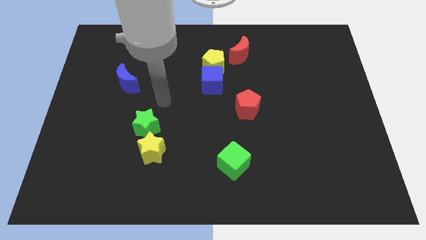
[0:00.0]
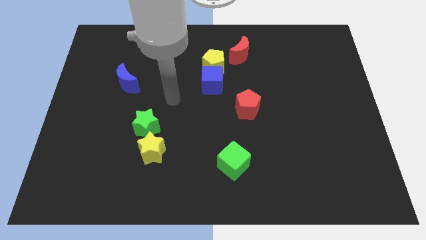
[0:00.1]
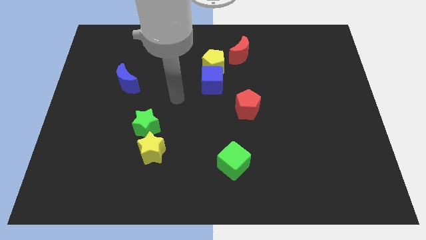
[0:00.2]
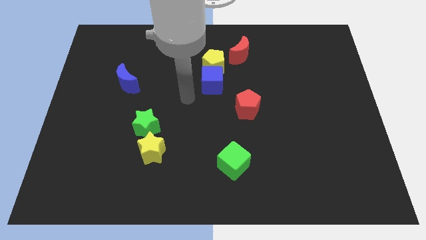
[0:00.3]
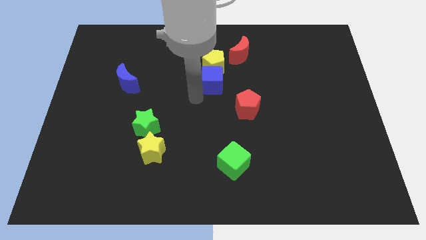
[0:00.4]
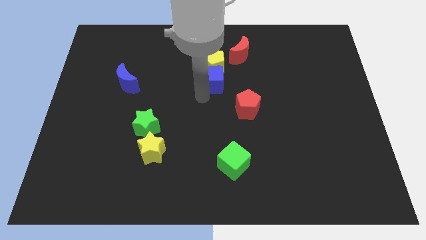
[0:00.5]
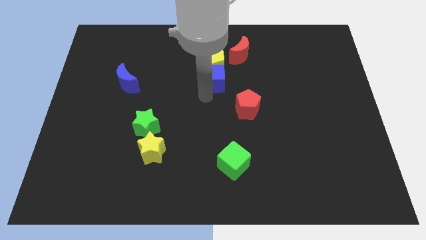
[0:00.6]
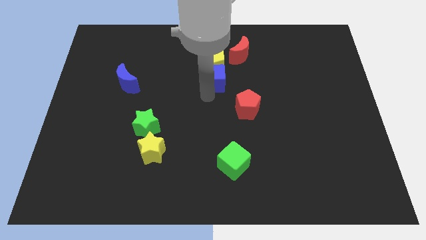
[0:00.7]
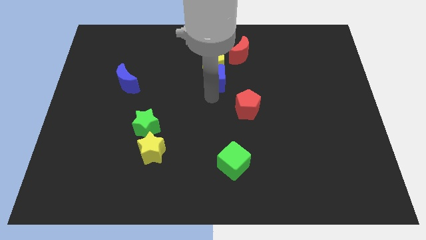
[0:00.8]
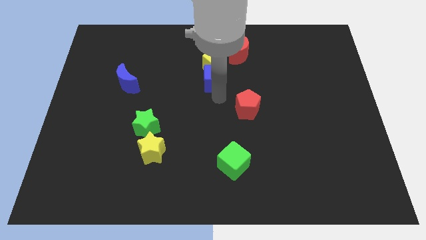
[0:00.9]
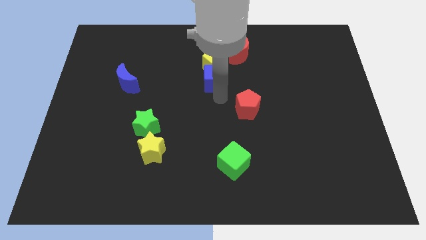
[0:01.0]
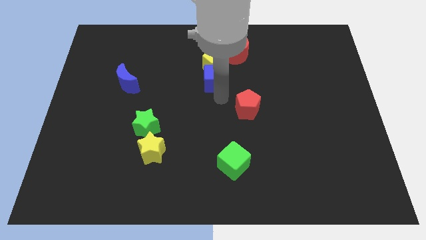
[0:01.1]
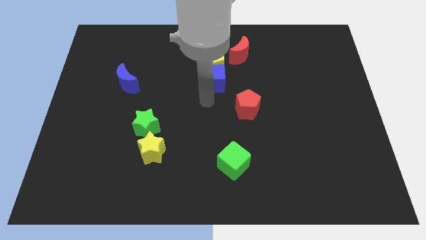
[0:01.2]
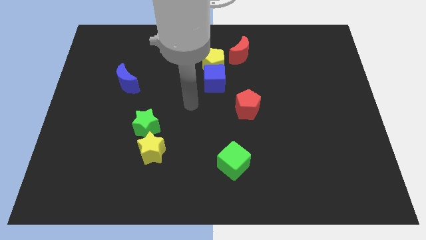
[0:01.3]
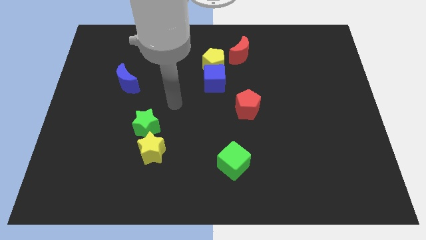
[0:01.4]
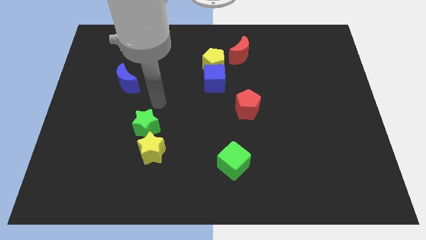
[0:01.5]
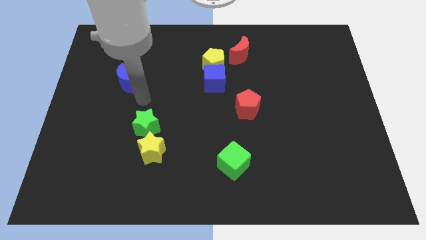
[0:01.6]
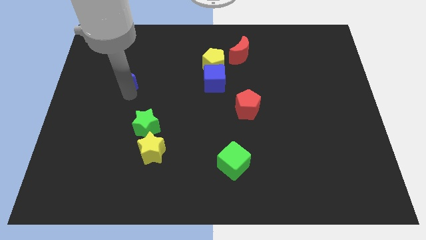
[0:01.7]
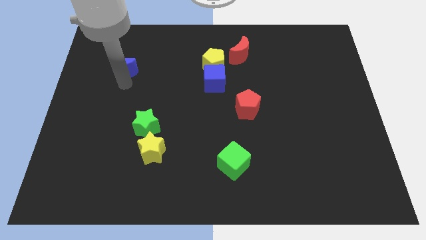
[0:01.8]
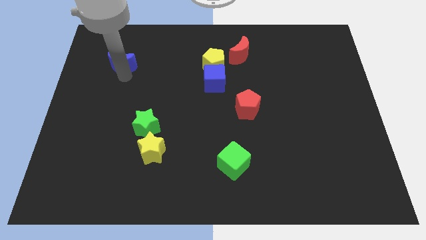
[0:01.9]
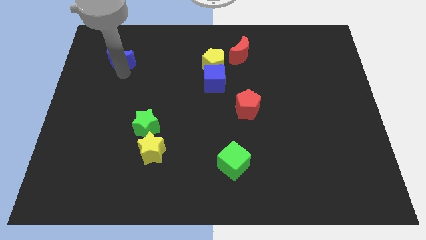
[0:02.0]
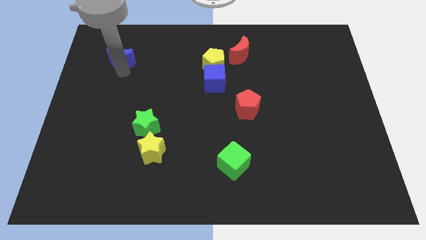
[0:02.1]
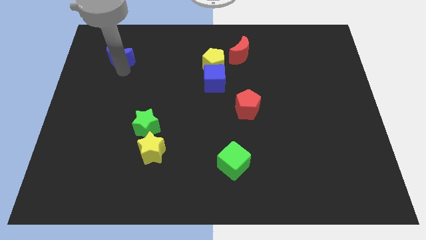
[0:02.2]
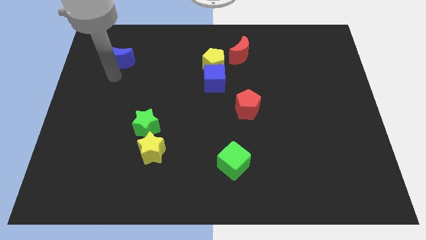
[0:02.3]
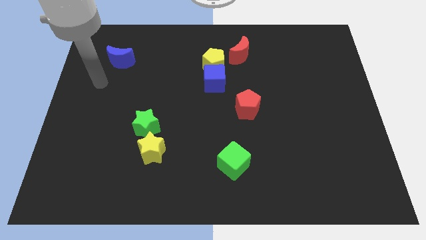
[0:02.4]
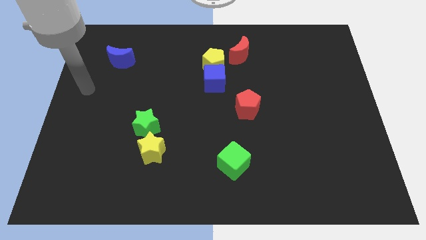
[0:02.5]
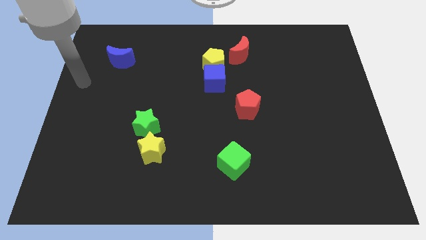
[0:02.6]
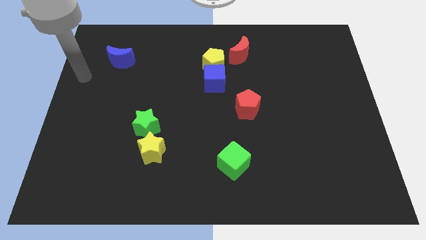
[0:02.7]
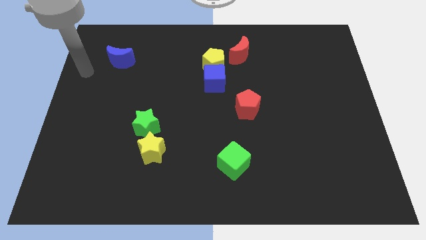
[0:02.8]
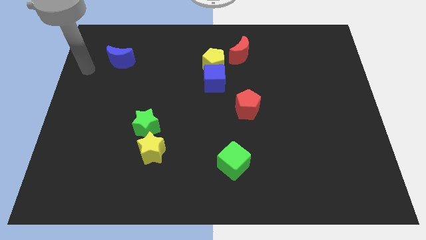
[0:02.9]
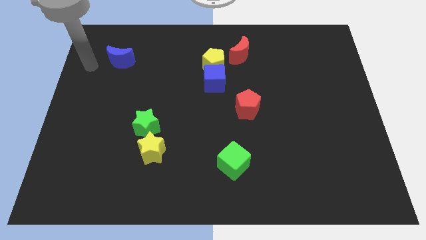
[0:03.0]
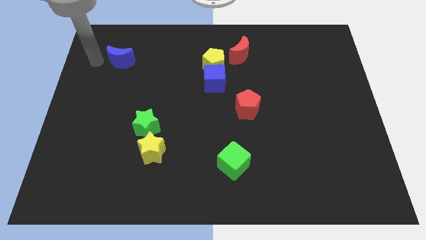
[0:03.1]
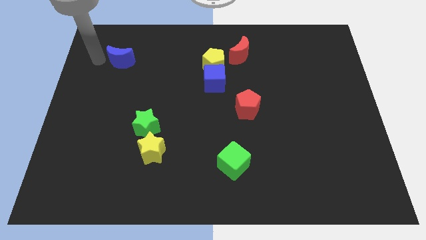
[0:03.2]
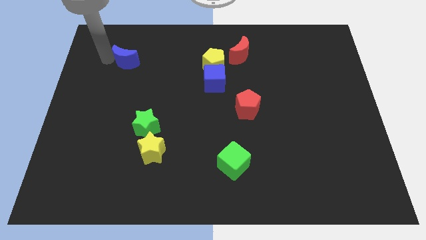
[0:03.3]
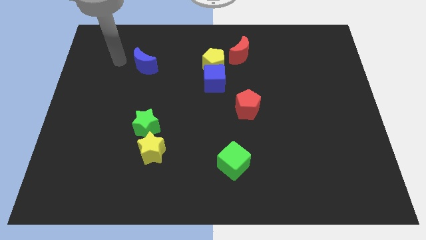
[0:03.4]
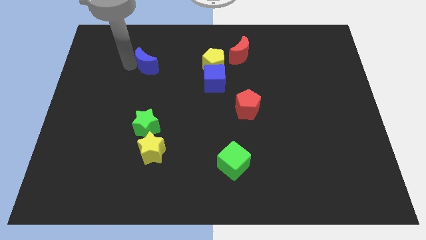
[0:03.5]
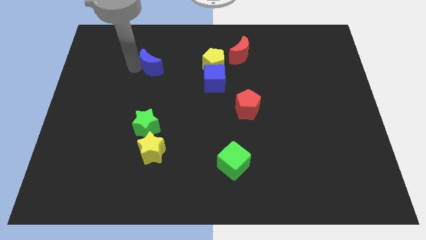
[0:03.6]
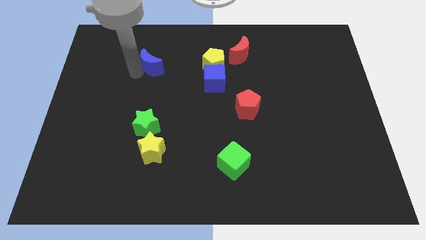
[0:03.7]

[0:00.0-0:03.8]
slide the blue crescent towards the right

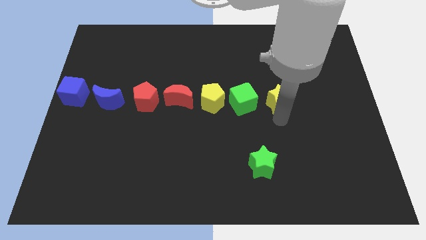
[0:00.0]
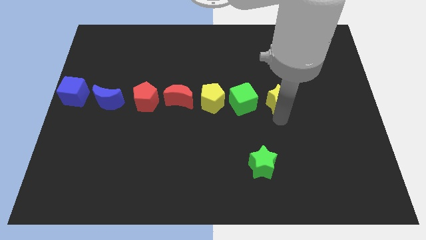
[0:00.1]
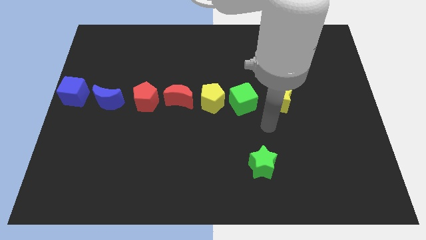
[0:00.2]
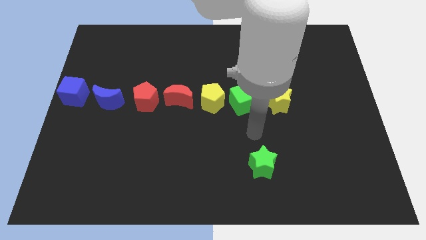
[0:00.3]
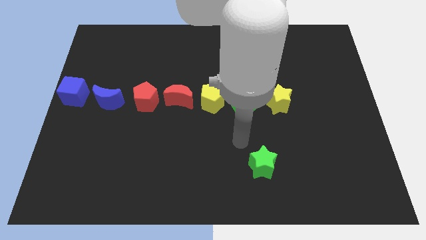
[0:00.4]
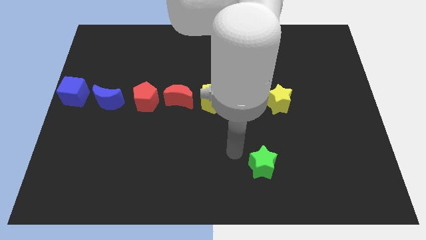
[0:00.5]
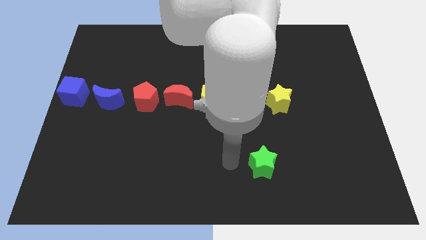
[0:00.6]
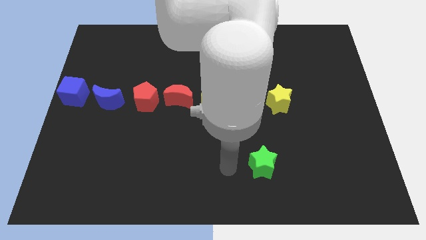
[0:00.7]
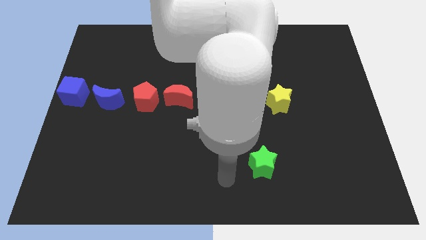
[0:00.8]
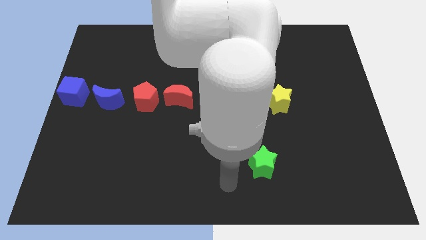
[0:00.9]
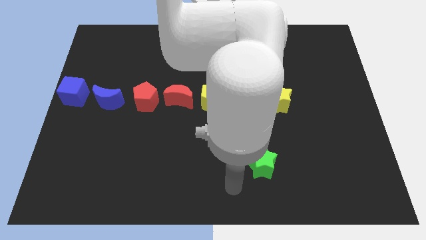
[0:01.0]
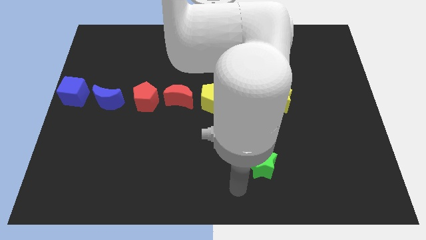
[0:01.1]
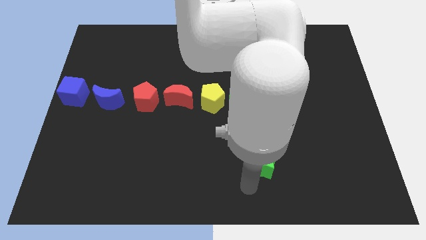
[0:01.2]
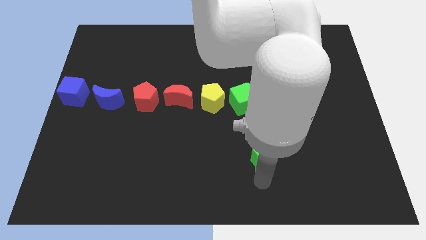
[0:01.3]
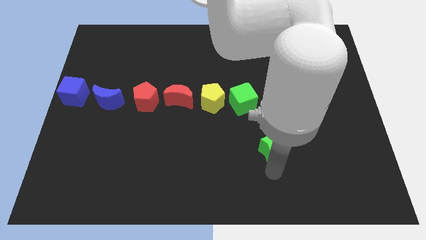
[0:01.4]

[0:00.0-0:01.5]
move away from the yellow star

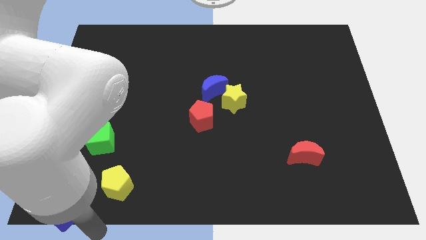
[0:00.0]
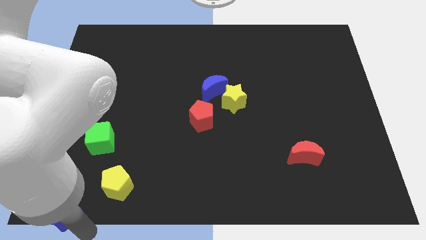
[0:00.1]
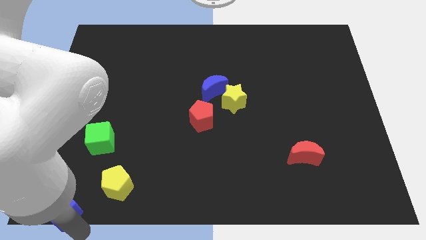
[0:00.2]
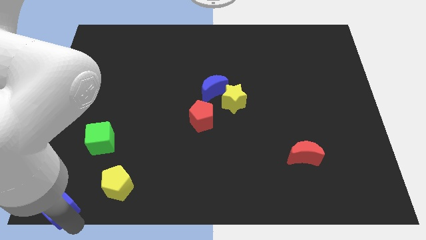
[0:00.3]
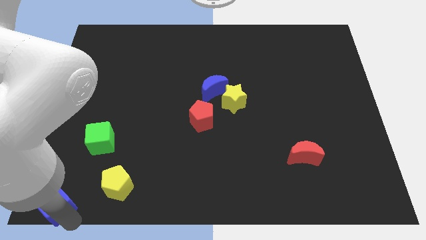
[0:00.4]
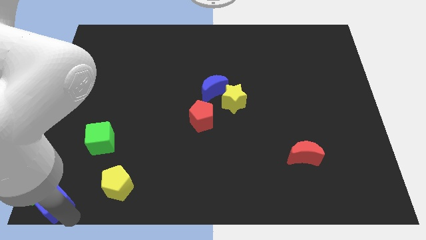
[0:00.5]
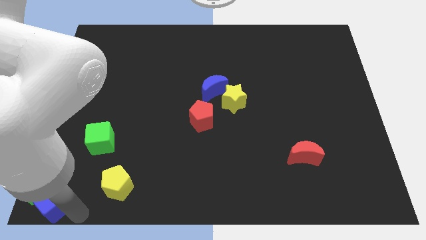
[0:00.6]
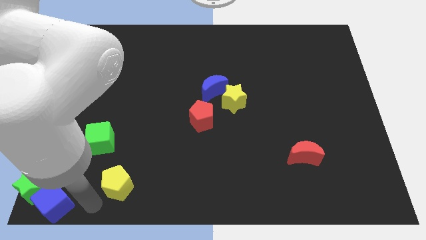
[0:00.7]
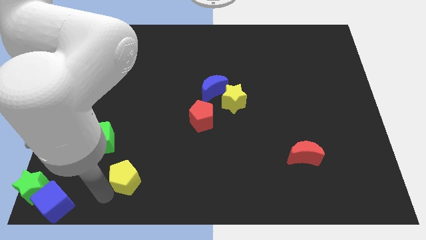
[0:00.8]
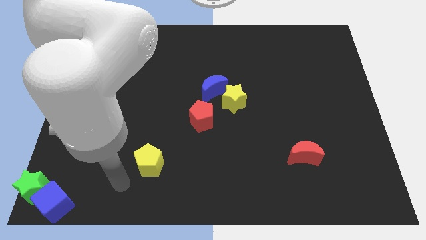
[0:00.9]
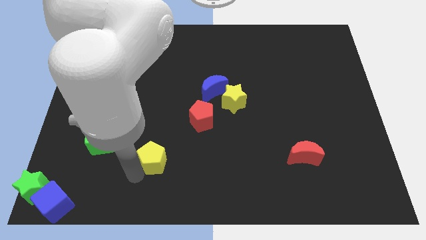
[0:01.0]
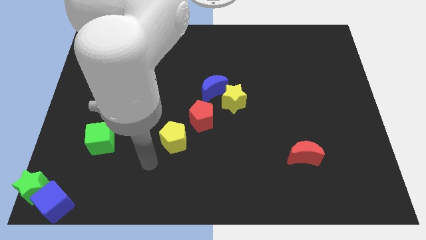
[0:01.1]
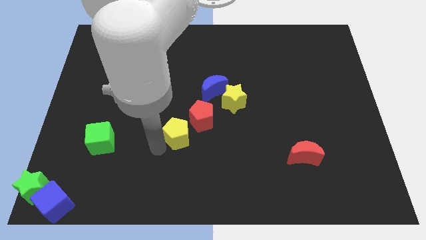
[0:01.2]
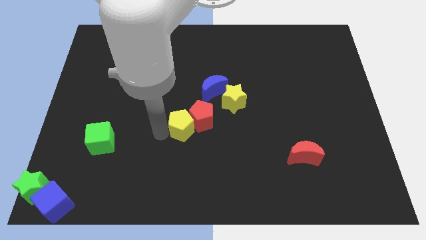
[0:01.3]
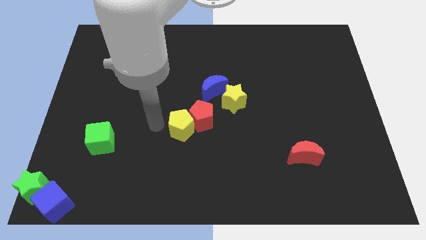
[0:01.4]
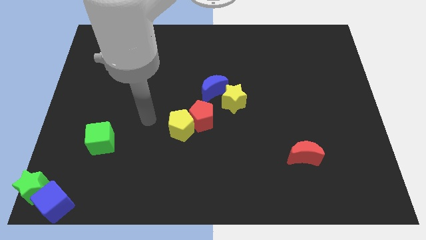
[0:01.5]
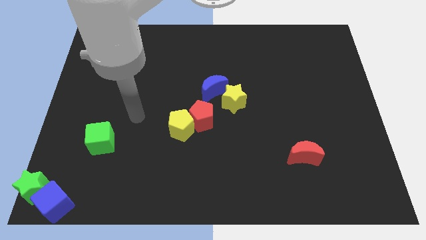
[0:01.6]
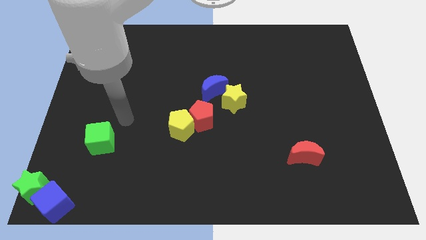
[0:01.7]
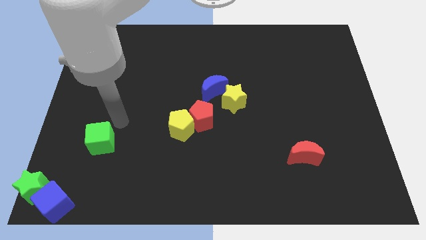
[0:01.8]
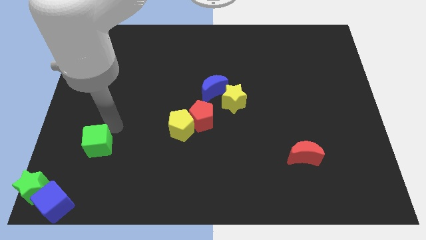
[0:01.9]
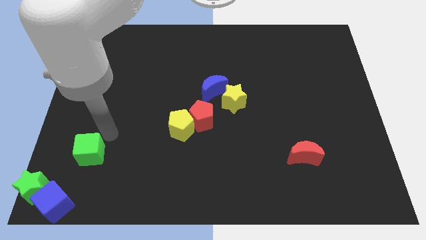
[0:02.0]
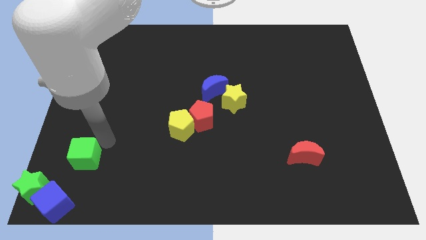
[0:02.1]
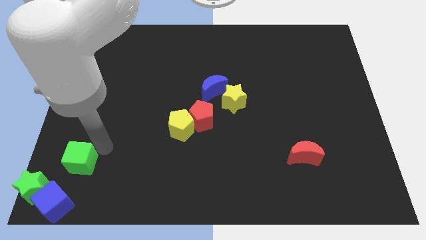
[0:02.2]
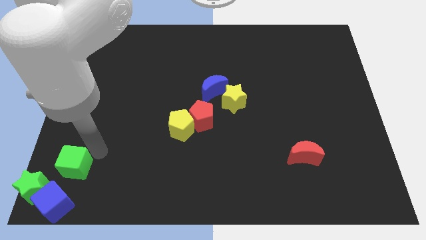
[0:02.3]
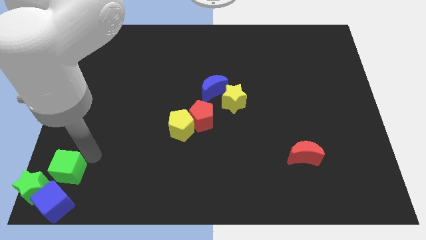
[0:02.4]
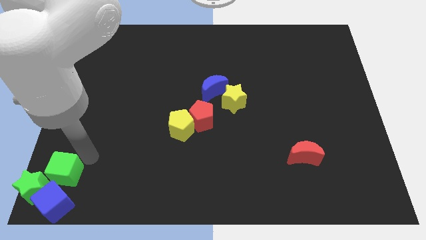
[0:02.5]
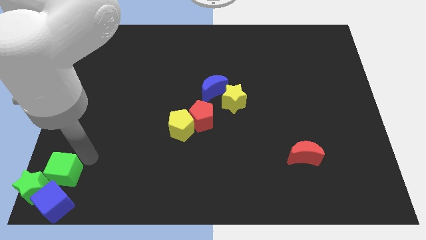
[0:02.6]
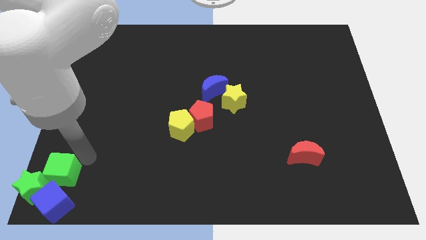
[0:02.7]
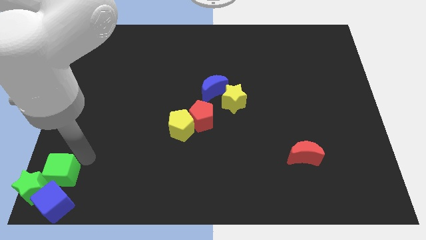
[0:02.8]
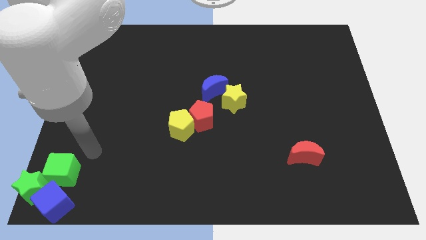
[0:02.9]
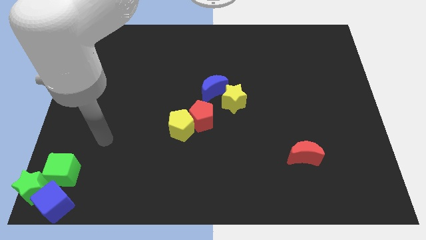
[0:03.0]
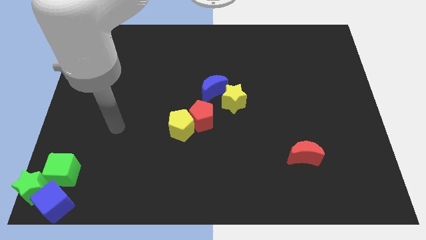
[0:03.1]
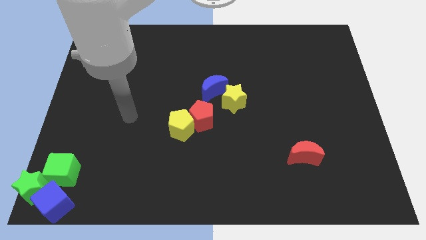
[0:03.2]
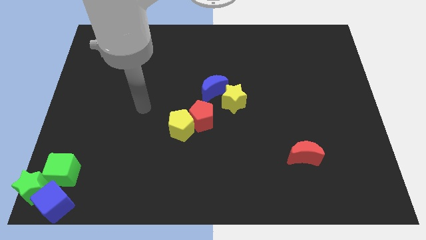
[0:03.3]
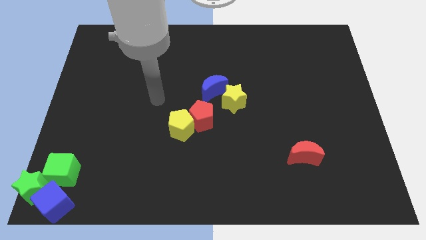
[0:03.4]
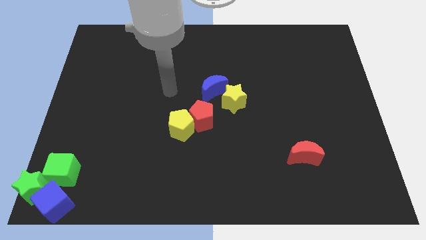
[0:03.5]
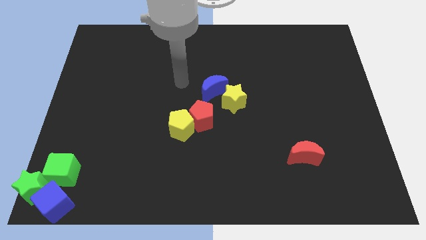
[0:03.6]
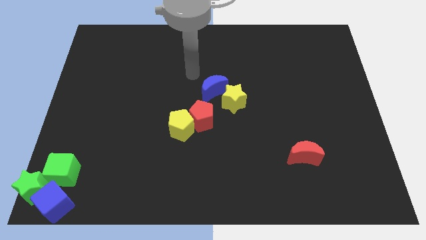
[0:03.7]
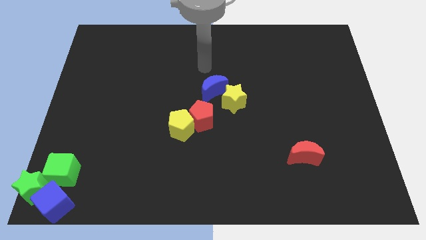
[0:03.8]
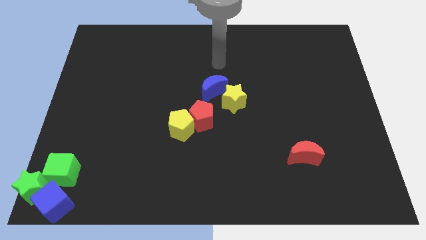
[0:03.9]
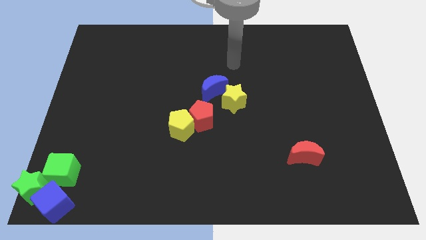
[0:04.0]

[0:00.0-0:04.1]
place the green cube close to the green star
